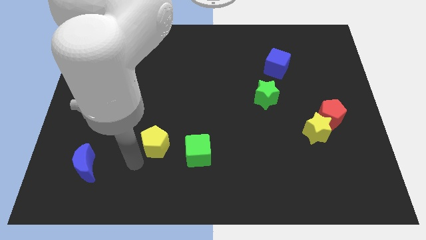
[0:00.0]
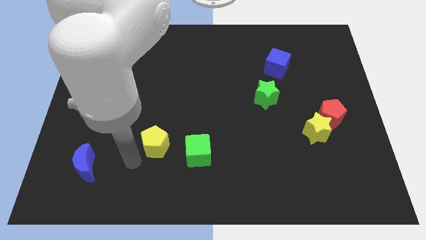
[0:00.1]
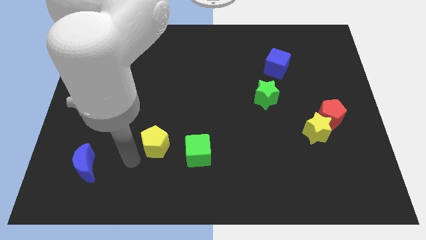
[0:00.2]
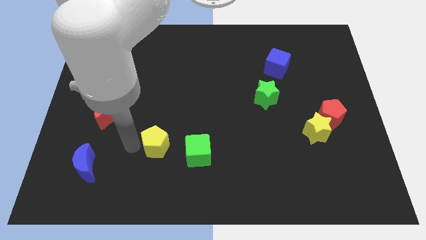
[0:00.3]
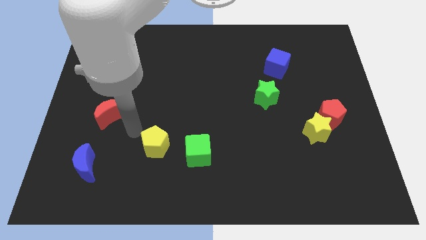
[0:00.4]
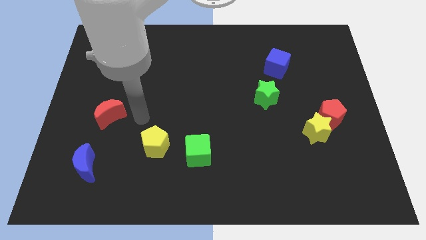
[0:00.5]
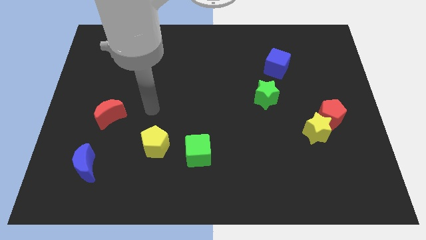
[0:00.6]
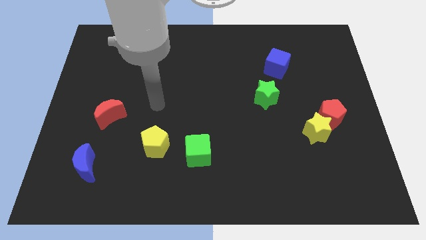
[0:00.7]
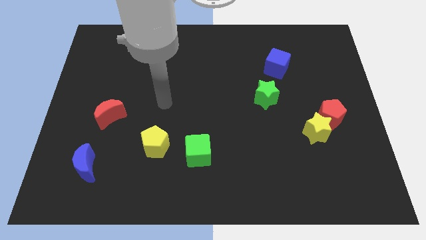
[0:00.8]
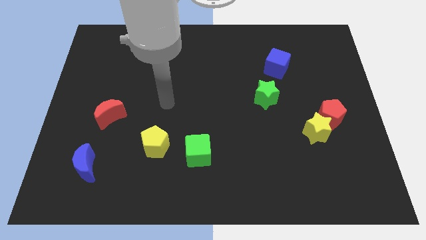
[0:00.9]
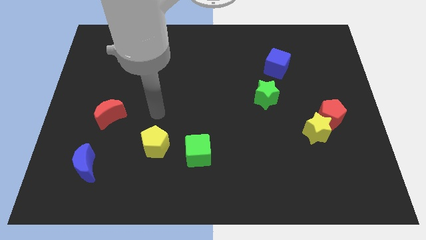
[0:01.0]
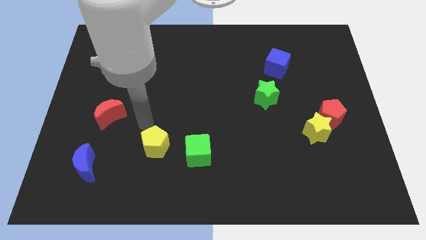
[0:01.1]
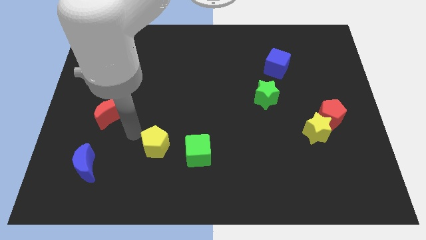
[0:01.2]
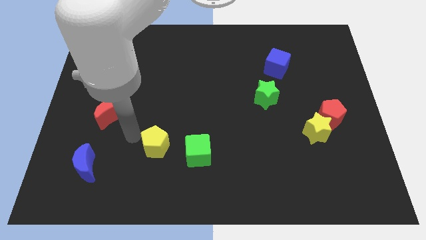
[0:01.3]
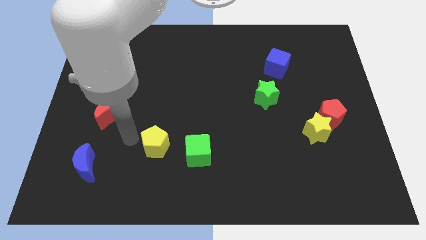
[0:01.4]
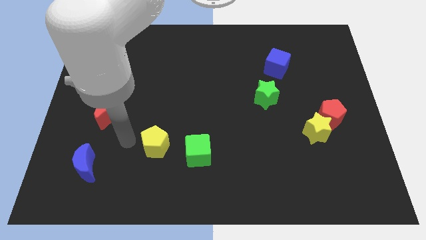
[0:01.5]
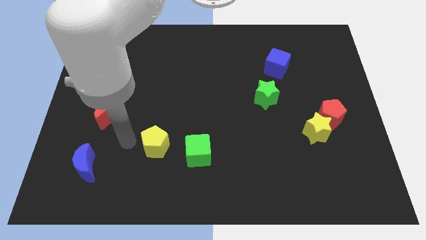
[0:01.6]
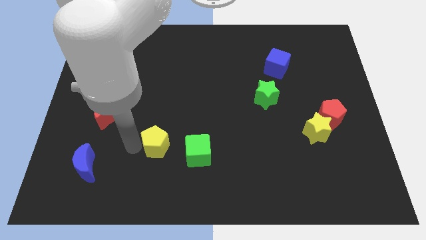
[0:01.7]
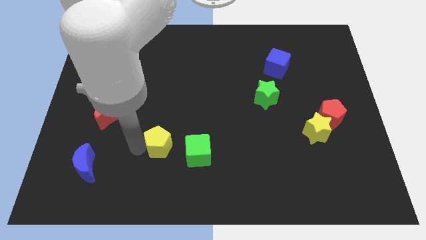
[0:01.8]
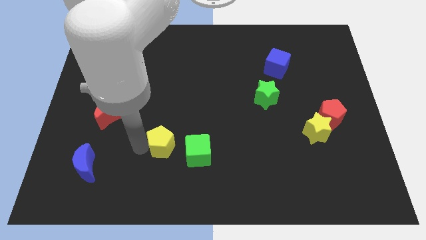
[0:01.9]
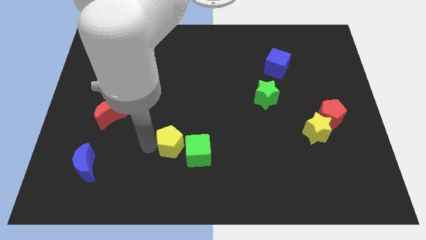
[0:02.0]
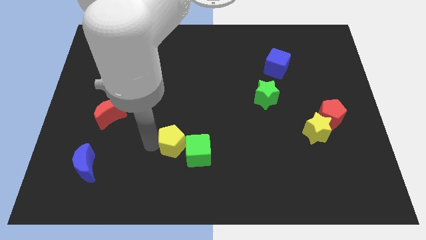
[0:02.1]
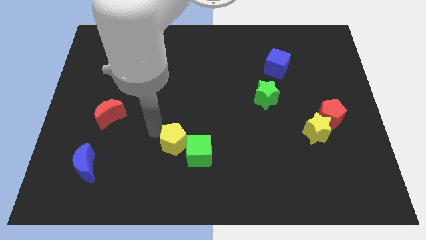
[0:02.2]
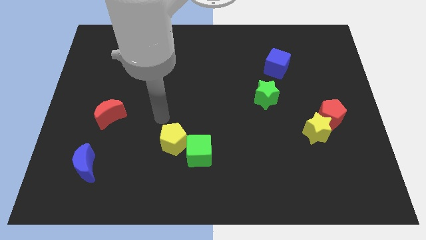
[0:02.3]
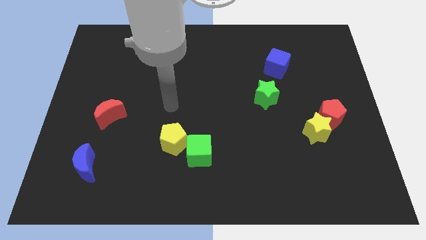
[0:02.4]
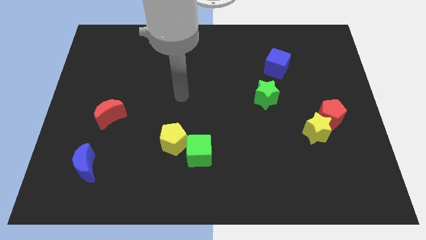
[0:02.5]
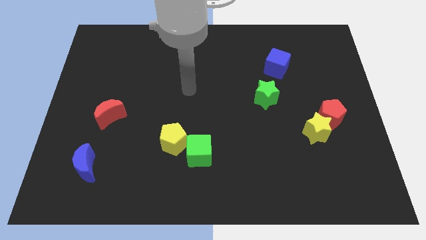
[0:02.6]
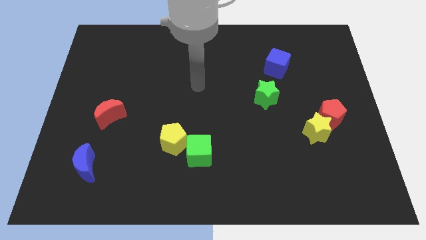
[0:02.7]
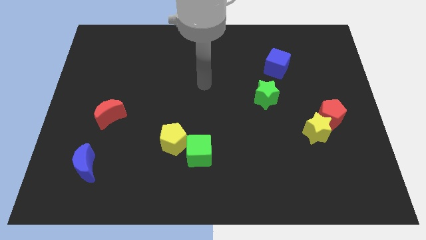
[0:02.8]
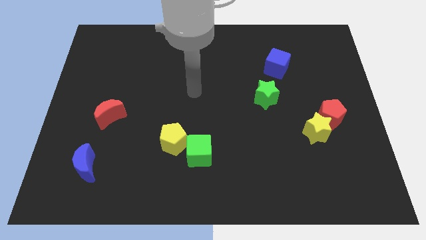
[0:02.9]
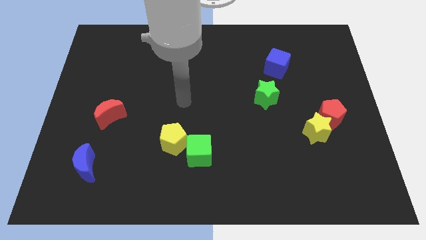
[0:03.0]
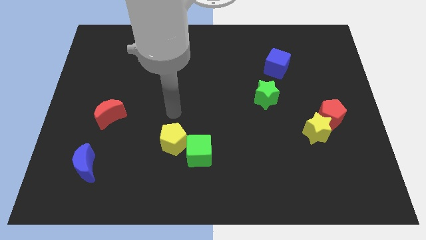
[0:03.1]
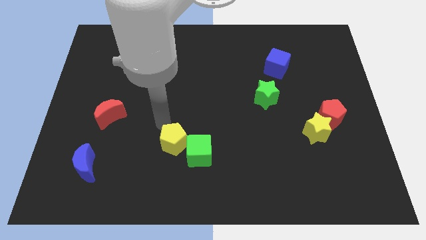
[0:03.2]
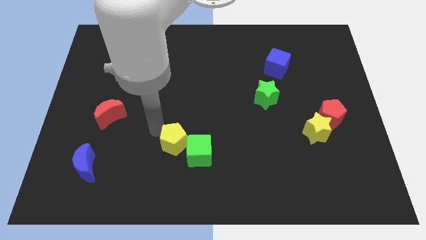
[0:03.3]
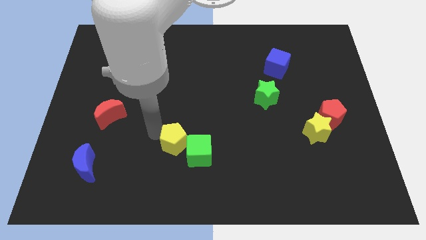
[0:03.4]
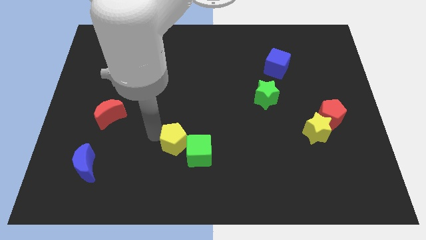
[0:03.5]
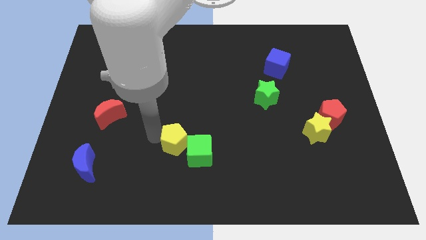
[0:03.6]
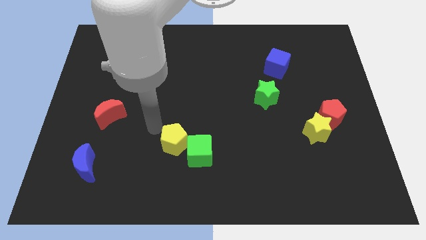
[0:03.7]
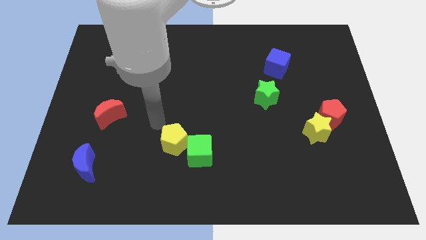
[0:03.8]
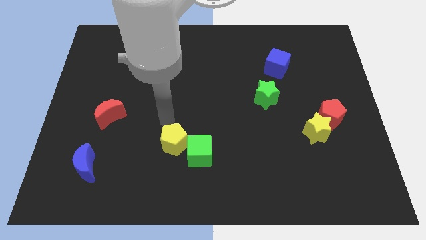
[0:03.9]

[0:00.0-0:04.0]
move the yellow pentagon to the left of the green cube

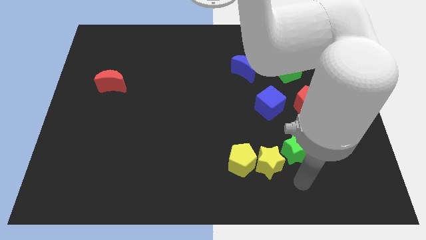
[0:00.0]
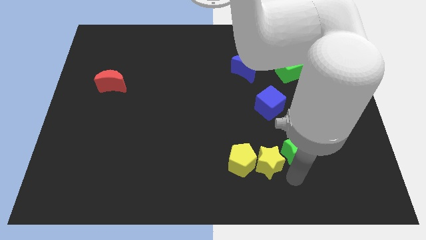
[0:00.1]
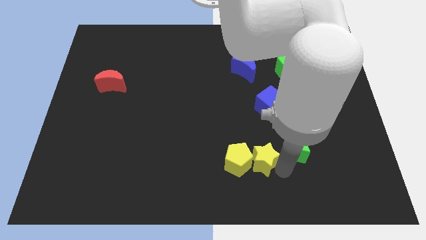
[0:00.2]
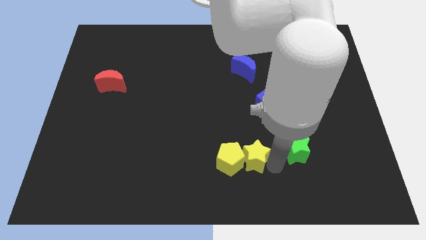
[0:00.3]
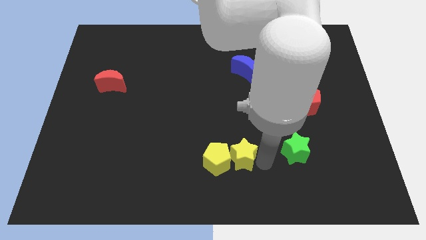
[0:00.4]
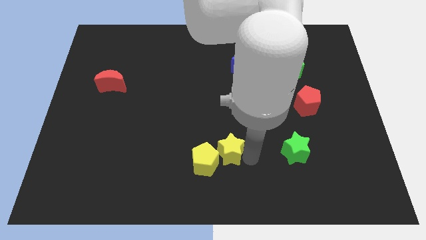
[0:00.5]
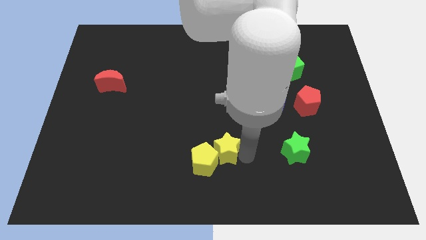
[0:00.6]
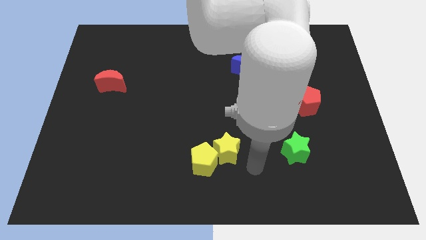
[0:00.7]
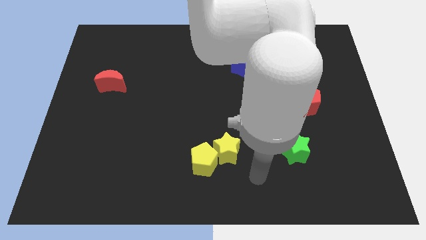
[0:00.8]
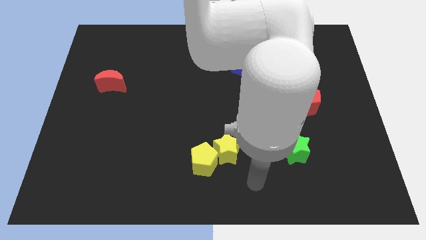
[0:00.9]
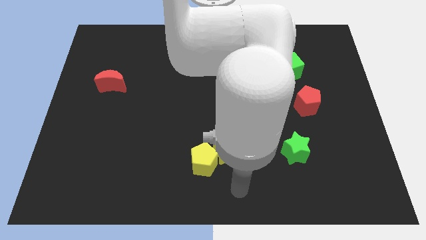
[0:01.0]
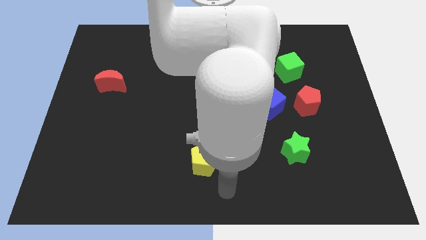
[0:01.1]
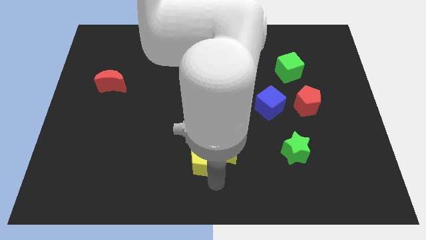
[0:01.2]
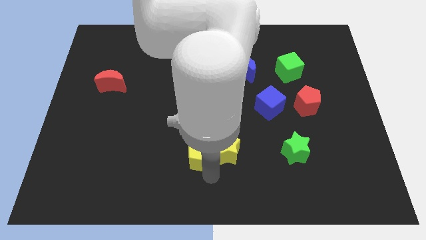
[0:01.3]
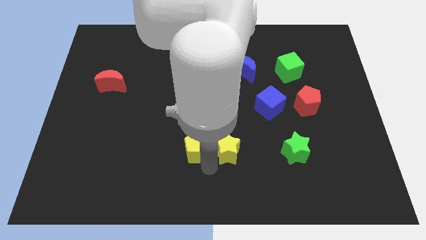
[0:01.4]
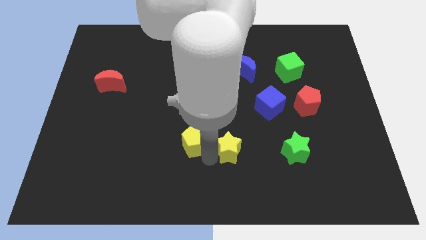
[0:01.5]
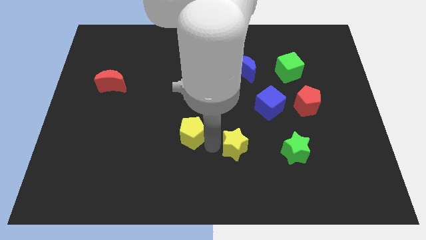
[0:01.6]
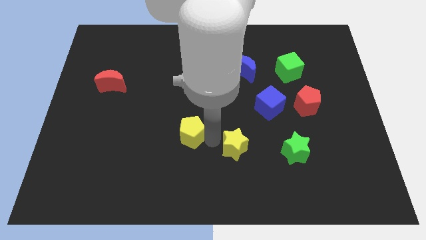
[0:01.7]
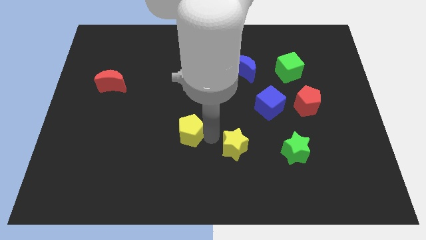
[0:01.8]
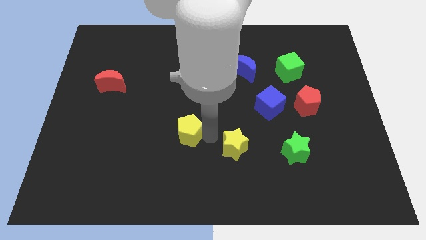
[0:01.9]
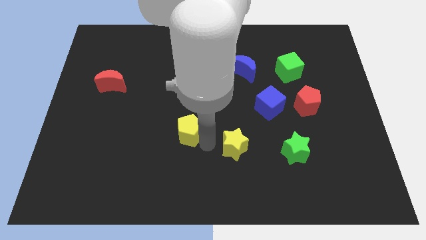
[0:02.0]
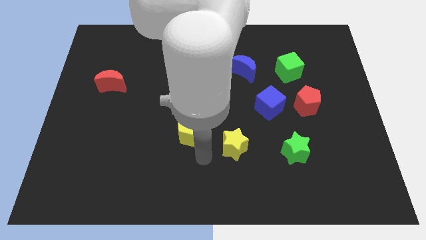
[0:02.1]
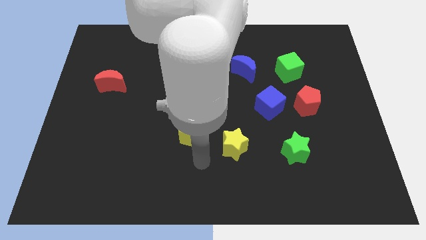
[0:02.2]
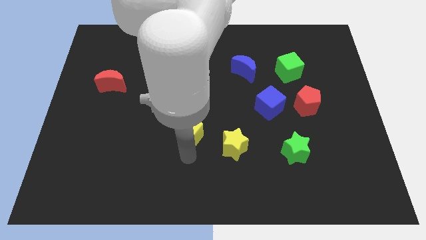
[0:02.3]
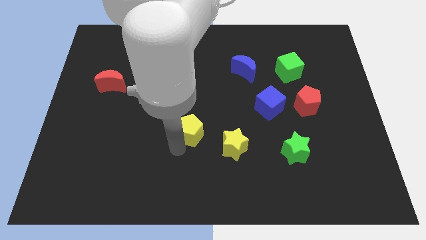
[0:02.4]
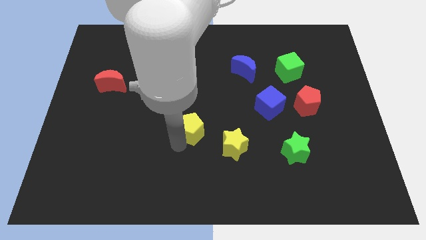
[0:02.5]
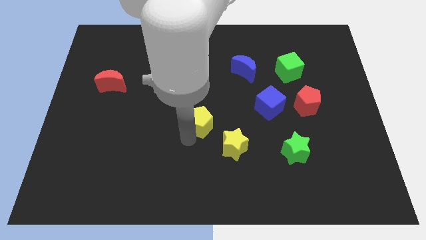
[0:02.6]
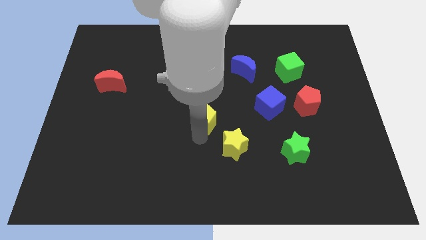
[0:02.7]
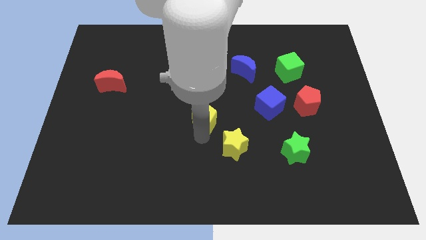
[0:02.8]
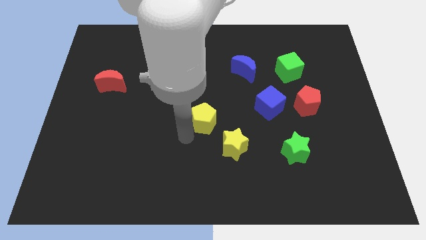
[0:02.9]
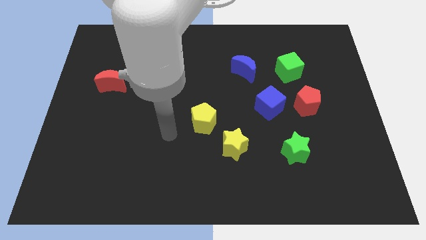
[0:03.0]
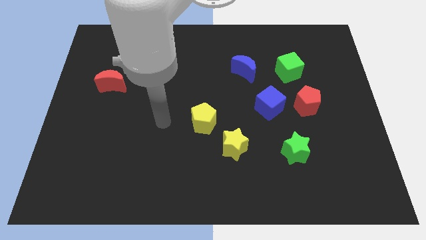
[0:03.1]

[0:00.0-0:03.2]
separate yellow blocks

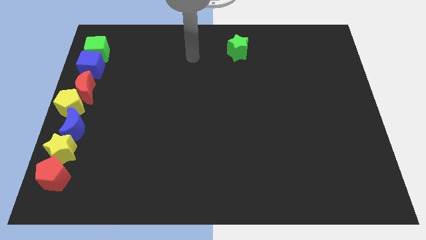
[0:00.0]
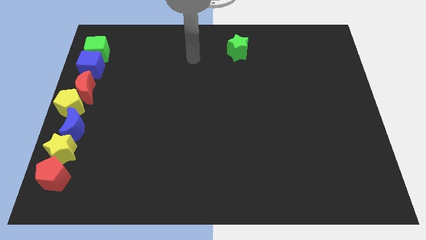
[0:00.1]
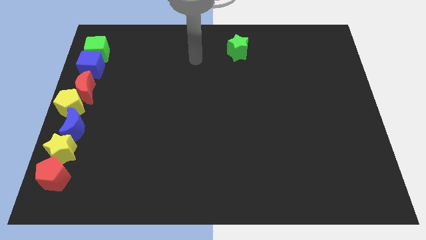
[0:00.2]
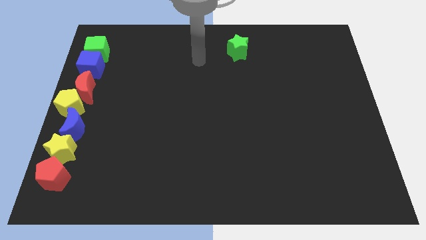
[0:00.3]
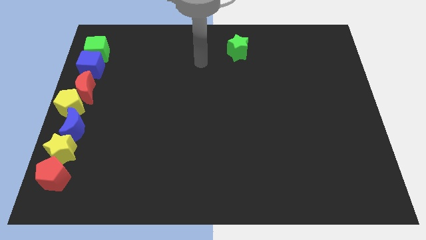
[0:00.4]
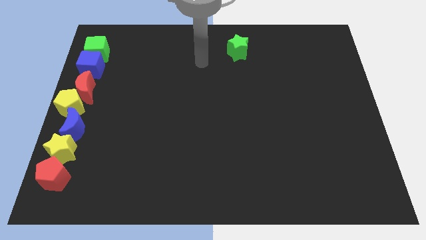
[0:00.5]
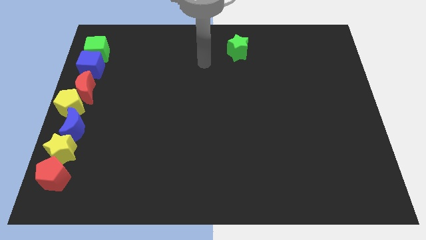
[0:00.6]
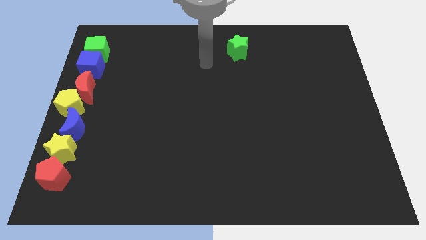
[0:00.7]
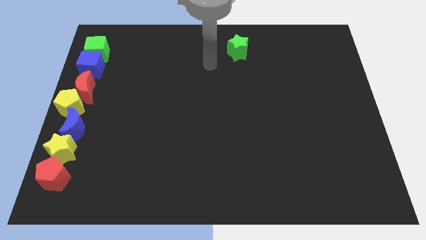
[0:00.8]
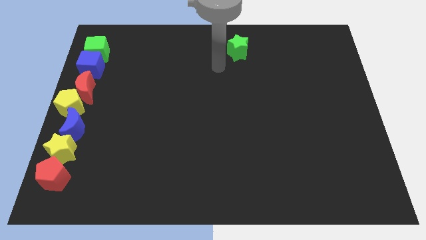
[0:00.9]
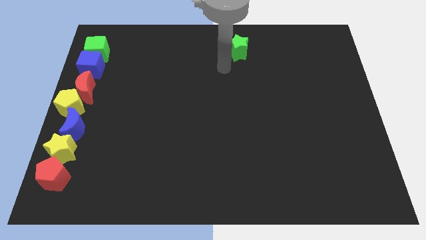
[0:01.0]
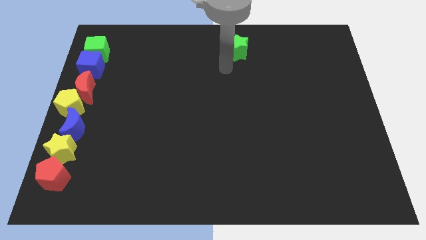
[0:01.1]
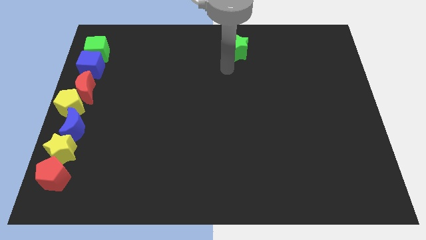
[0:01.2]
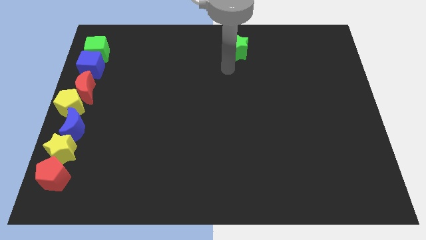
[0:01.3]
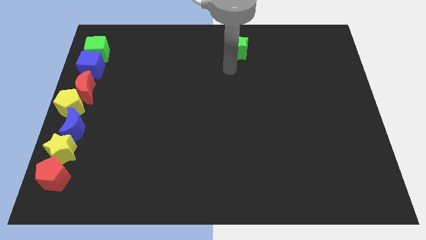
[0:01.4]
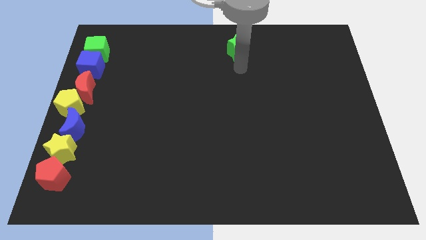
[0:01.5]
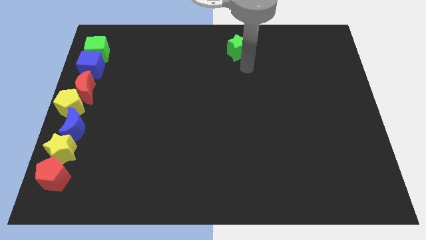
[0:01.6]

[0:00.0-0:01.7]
move your arm to the bottom side of the green star
